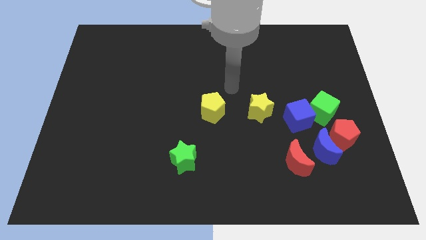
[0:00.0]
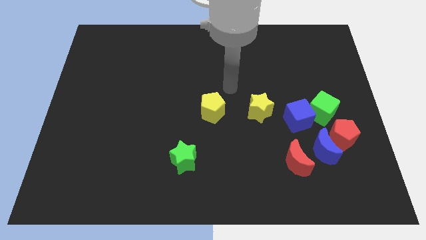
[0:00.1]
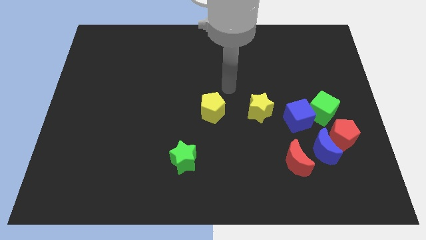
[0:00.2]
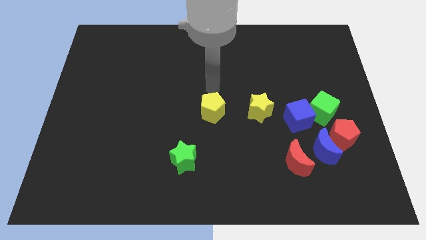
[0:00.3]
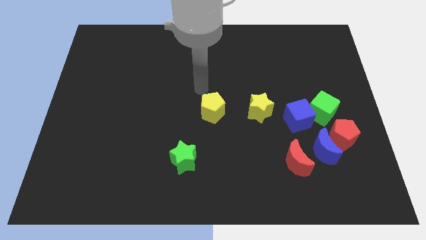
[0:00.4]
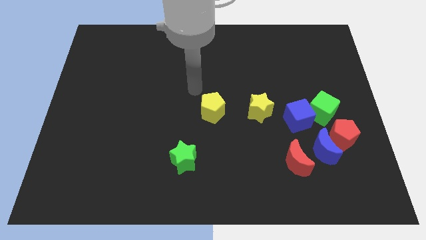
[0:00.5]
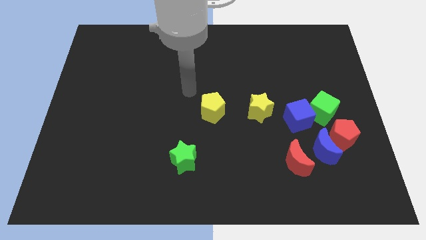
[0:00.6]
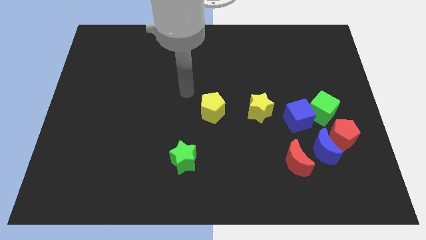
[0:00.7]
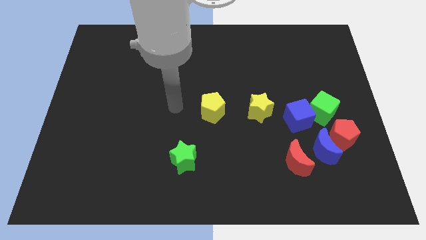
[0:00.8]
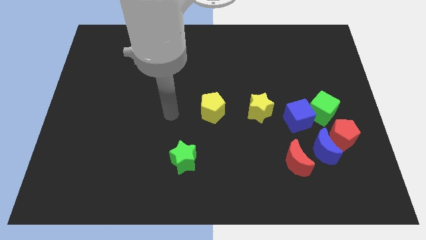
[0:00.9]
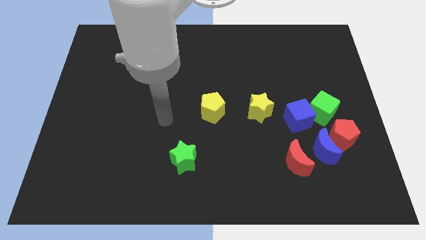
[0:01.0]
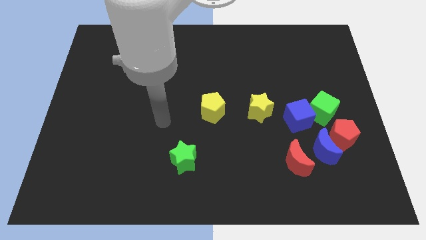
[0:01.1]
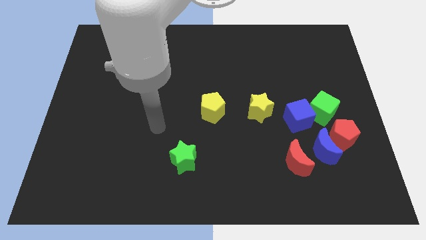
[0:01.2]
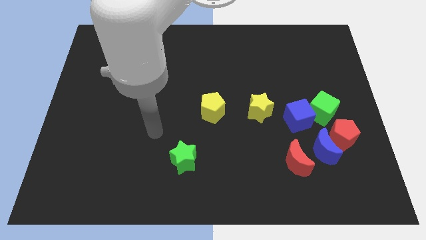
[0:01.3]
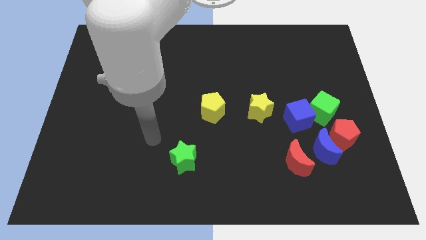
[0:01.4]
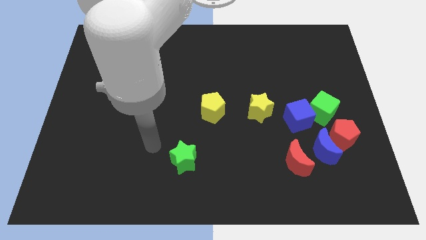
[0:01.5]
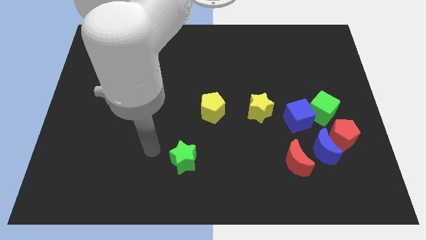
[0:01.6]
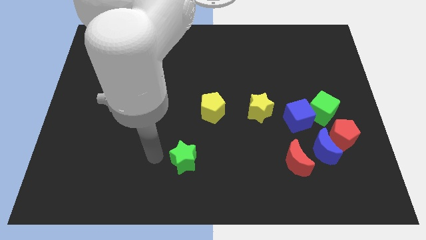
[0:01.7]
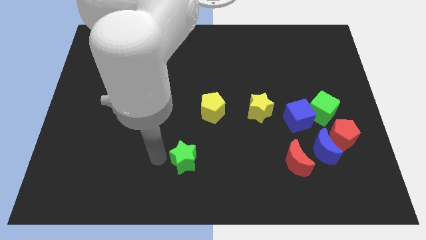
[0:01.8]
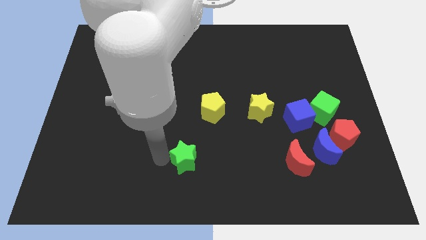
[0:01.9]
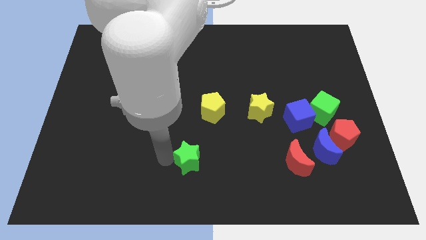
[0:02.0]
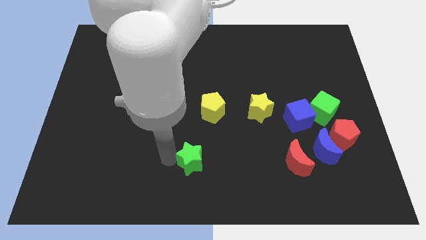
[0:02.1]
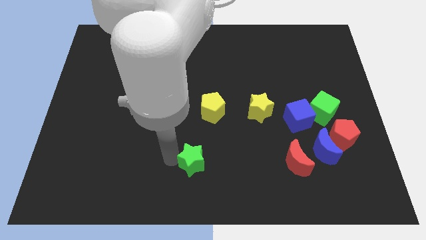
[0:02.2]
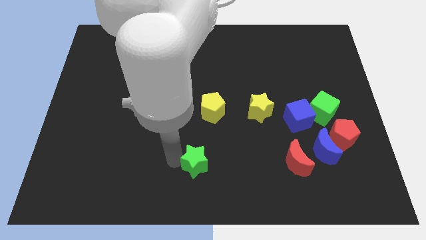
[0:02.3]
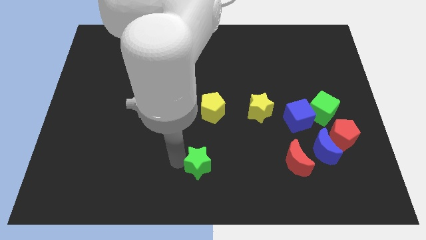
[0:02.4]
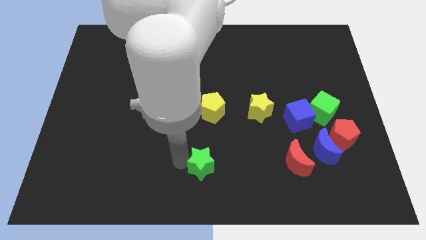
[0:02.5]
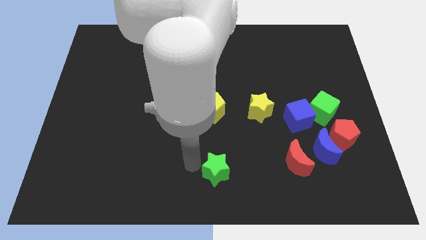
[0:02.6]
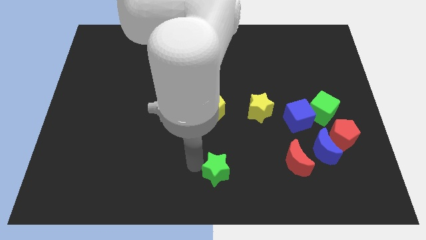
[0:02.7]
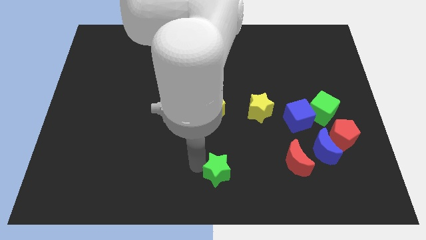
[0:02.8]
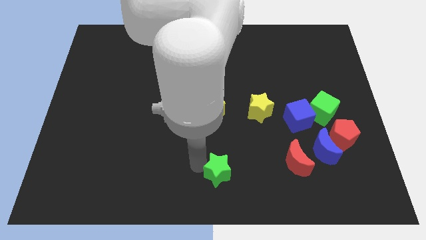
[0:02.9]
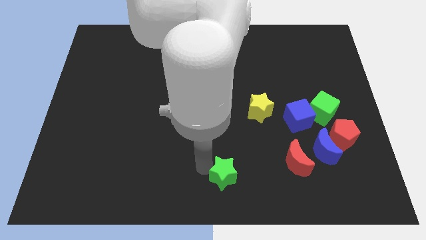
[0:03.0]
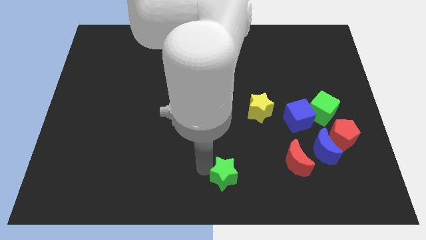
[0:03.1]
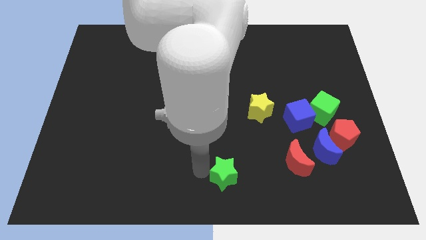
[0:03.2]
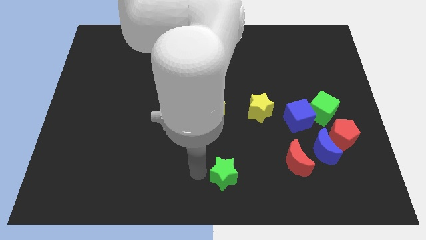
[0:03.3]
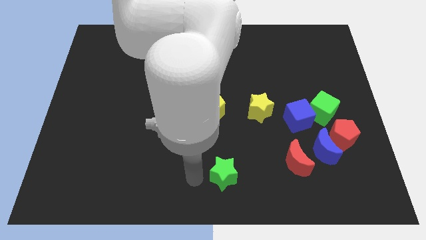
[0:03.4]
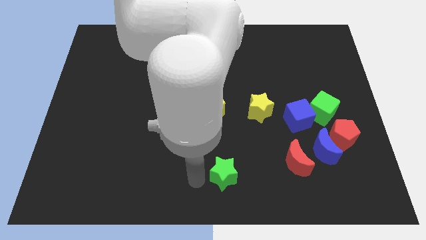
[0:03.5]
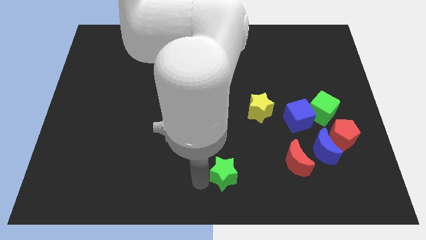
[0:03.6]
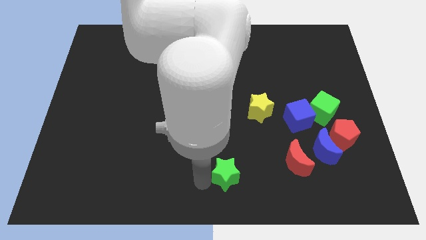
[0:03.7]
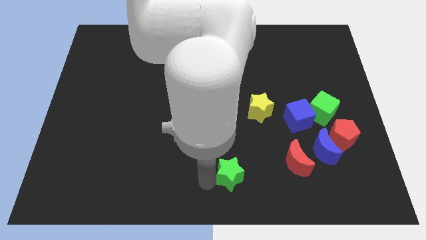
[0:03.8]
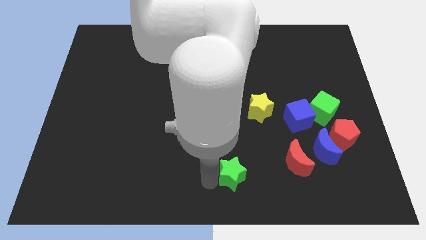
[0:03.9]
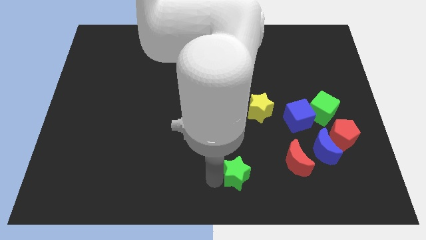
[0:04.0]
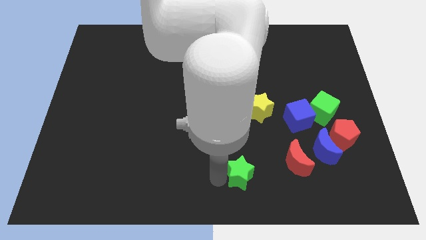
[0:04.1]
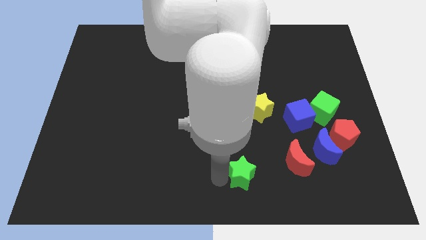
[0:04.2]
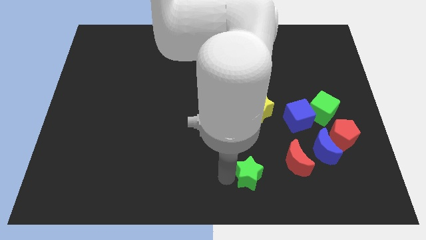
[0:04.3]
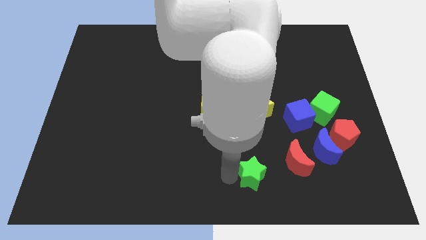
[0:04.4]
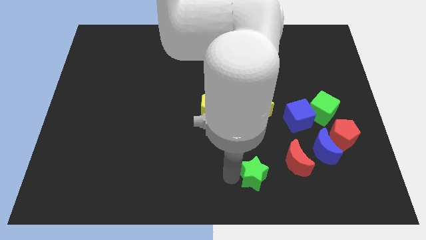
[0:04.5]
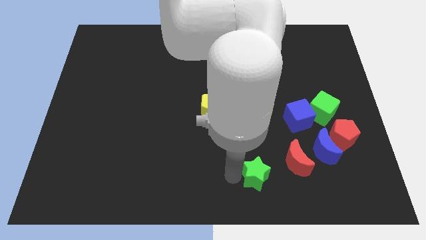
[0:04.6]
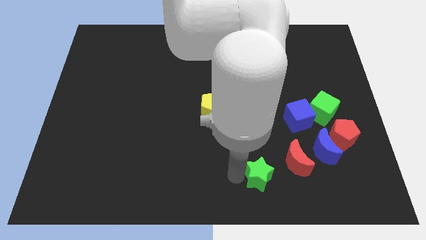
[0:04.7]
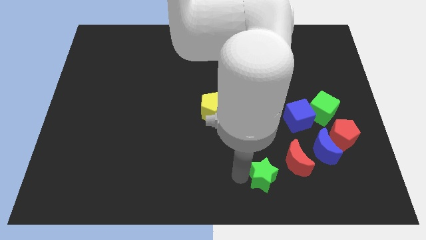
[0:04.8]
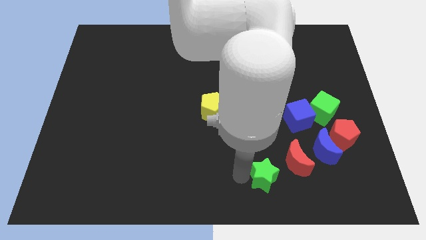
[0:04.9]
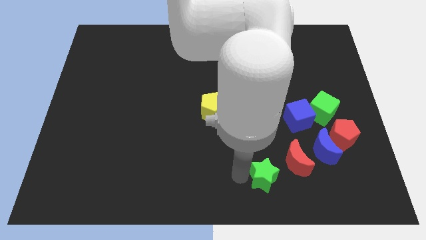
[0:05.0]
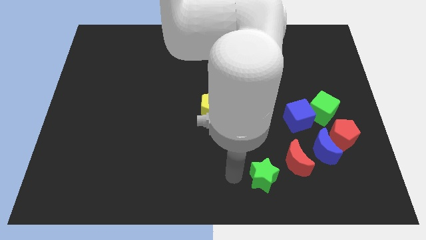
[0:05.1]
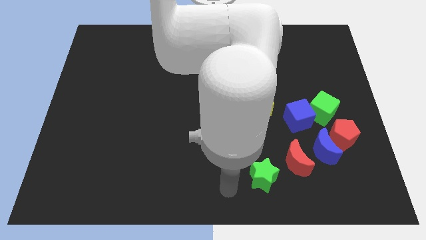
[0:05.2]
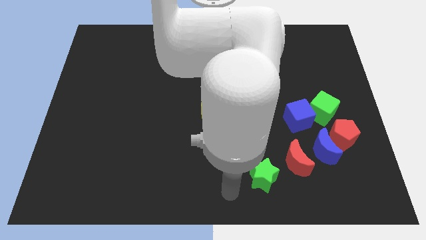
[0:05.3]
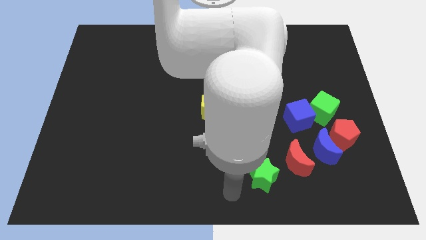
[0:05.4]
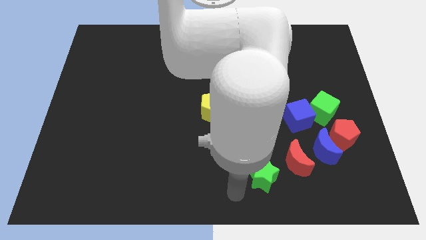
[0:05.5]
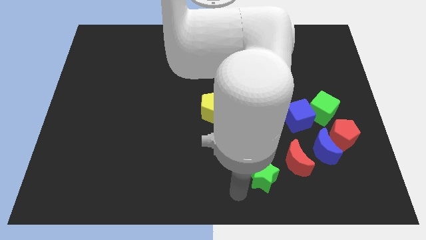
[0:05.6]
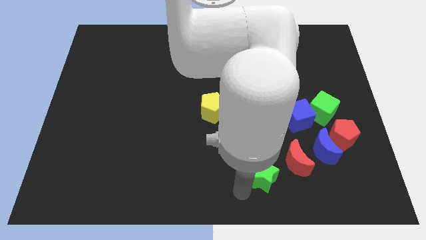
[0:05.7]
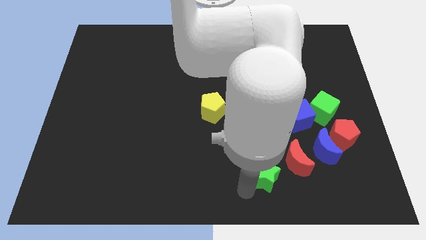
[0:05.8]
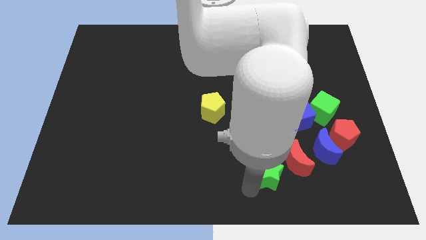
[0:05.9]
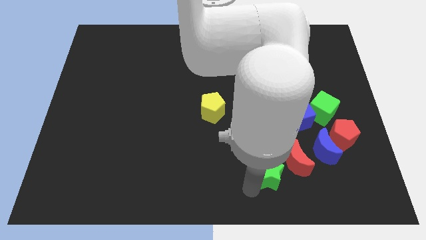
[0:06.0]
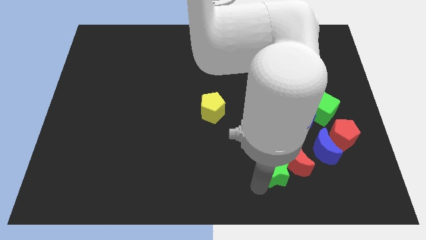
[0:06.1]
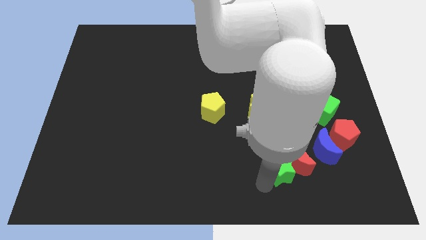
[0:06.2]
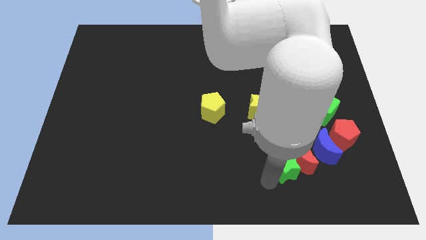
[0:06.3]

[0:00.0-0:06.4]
push the green star close to the red moon

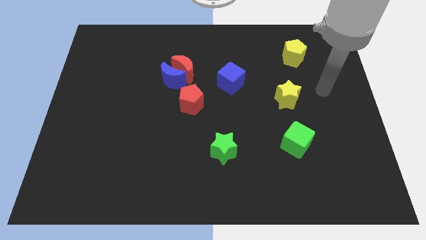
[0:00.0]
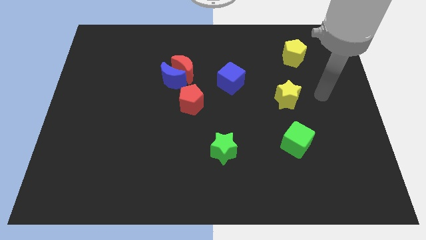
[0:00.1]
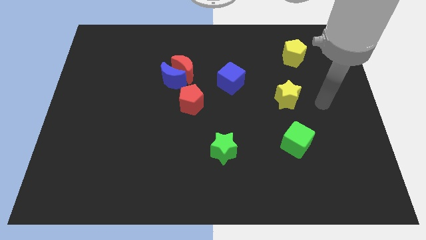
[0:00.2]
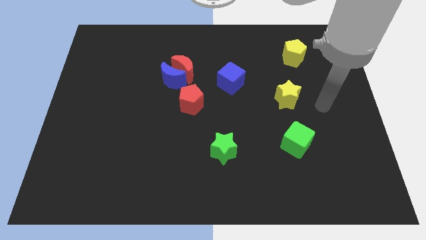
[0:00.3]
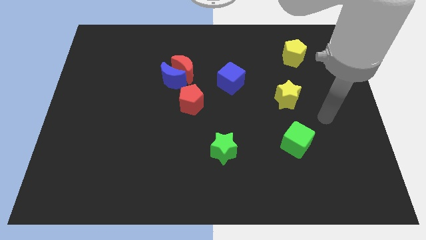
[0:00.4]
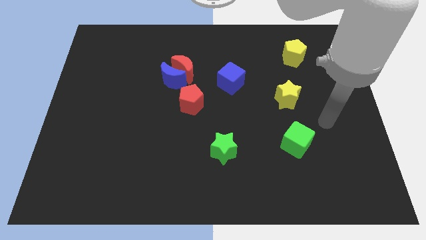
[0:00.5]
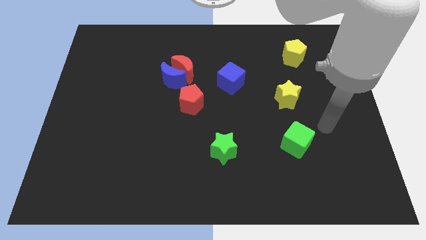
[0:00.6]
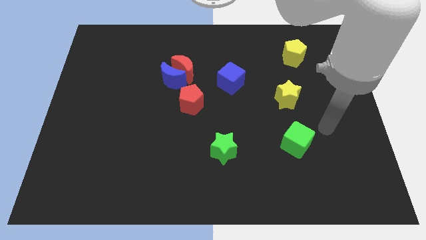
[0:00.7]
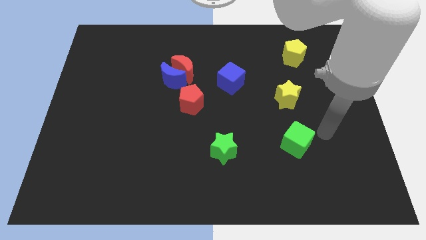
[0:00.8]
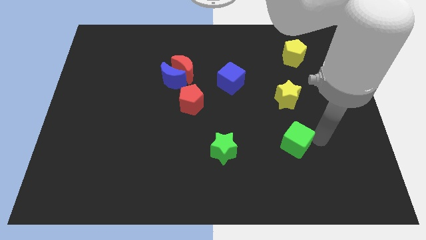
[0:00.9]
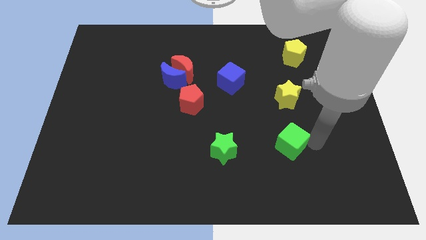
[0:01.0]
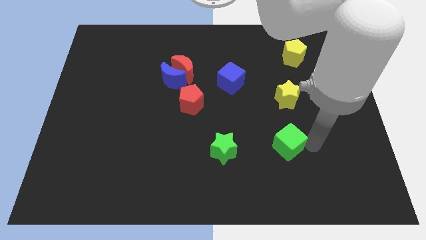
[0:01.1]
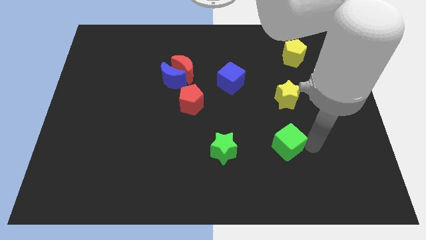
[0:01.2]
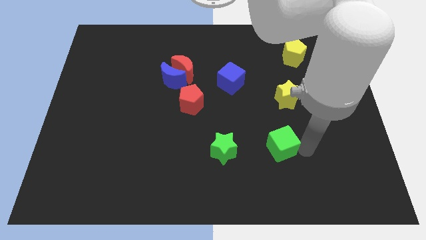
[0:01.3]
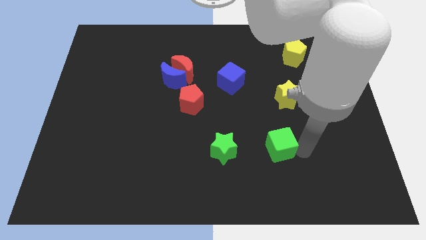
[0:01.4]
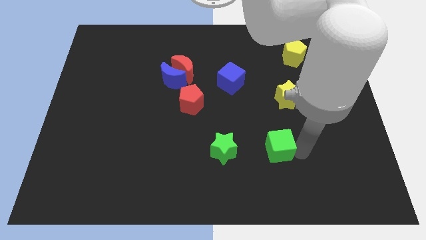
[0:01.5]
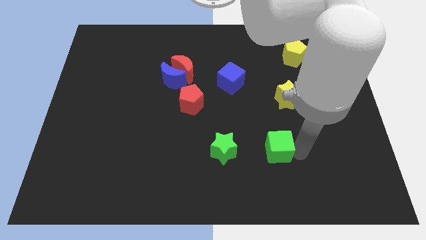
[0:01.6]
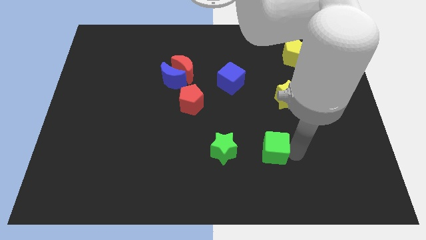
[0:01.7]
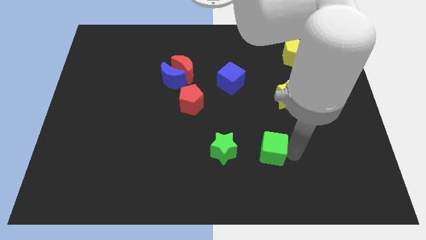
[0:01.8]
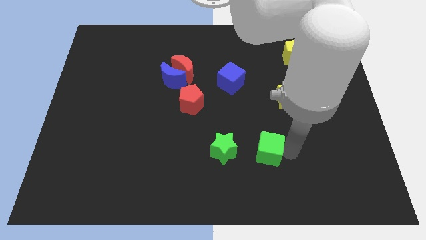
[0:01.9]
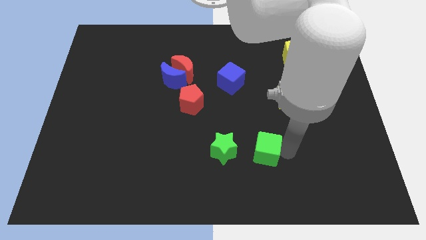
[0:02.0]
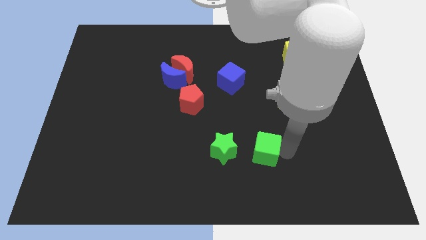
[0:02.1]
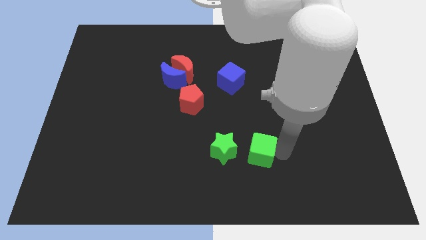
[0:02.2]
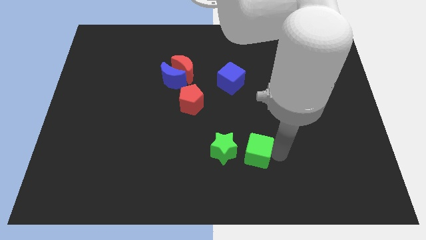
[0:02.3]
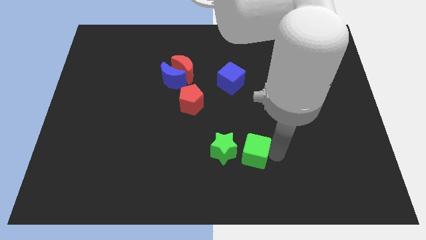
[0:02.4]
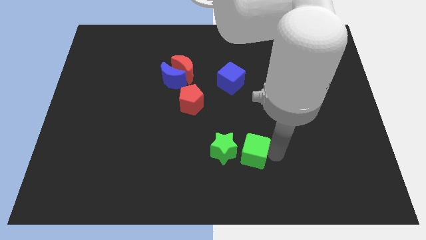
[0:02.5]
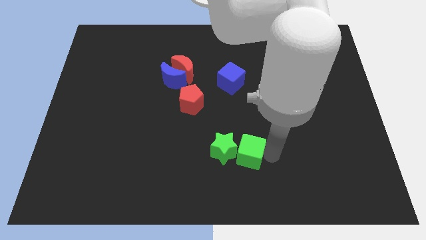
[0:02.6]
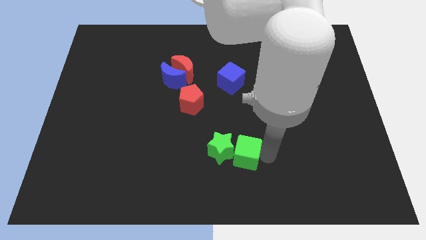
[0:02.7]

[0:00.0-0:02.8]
move the green cube towards the green star
